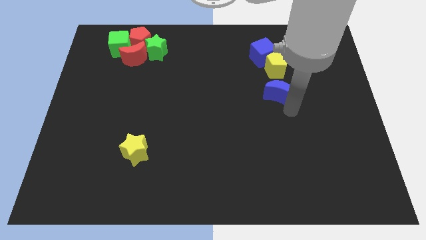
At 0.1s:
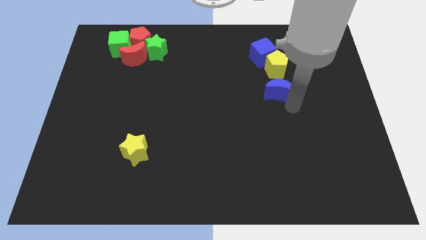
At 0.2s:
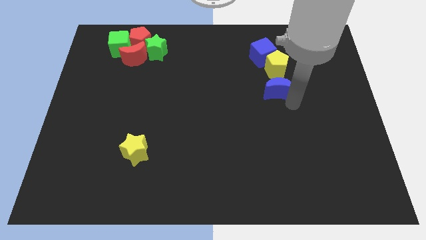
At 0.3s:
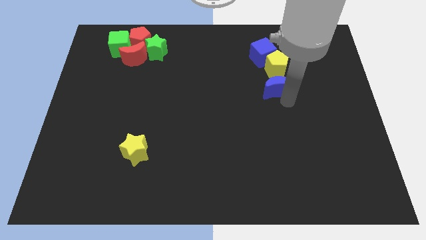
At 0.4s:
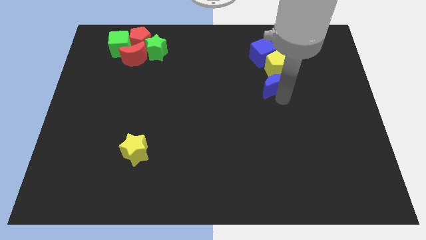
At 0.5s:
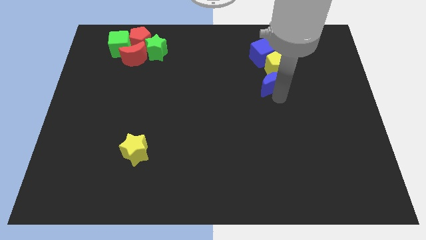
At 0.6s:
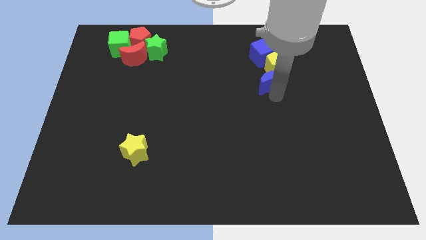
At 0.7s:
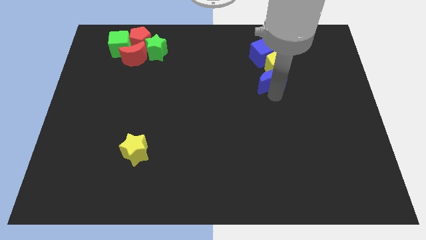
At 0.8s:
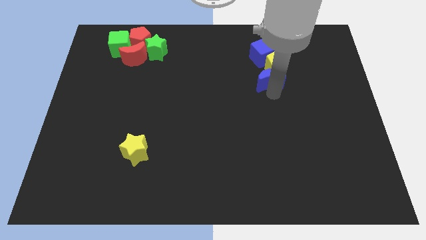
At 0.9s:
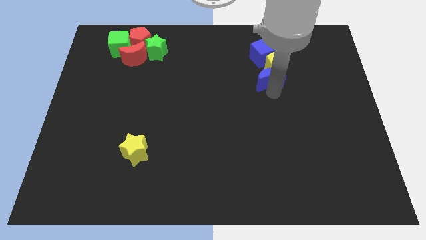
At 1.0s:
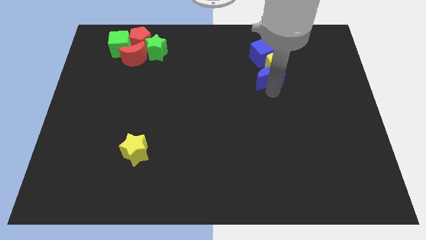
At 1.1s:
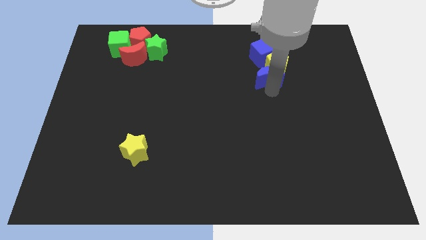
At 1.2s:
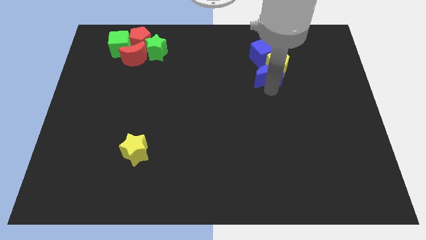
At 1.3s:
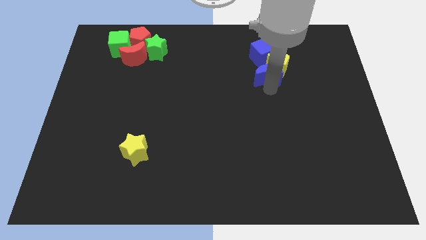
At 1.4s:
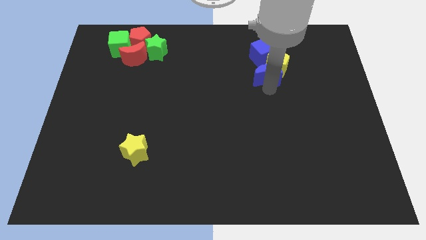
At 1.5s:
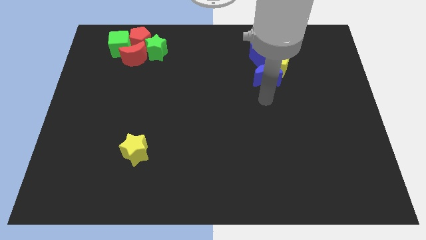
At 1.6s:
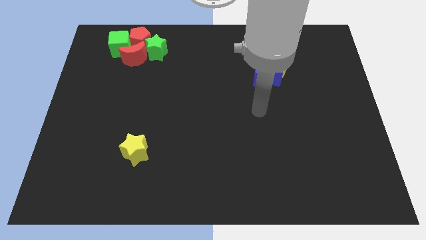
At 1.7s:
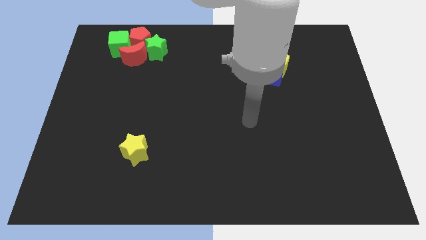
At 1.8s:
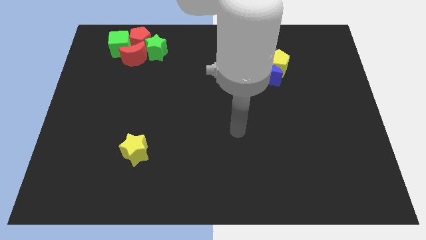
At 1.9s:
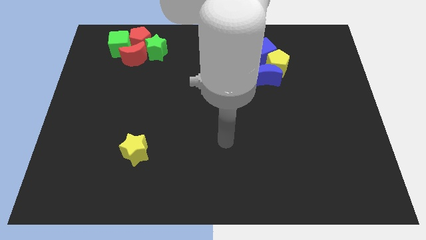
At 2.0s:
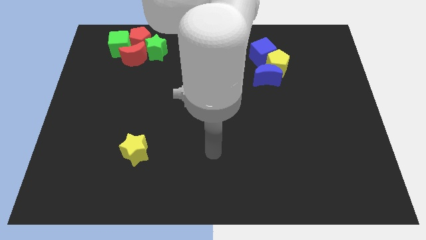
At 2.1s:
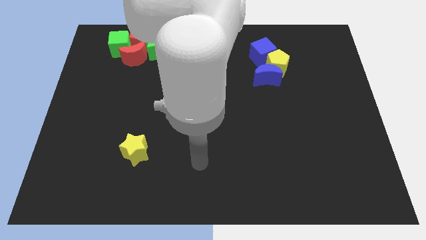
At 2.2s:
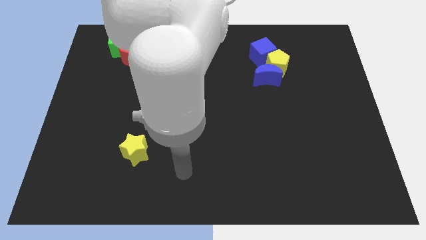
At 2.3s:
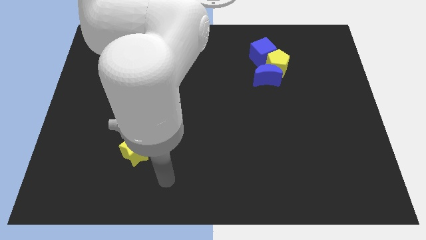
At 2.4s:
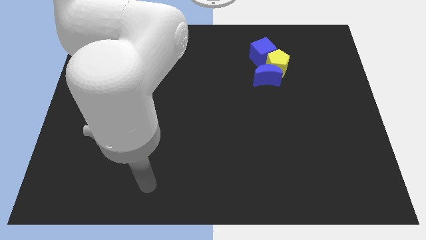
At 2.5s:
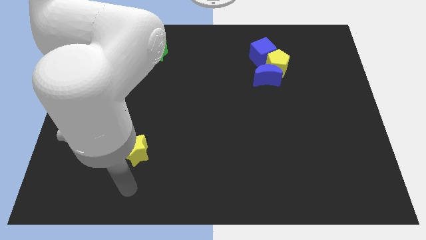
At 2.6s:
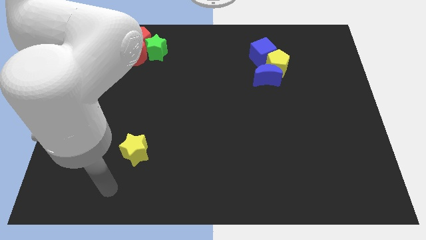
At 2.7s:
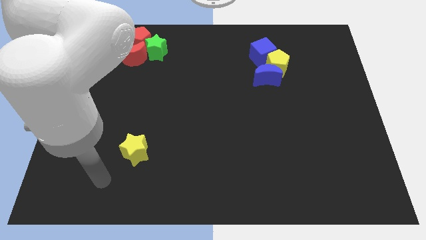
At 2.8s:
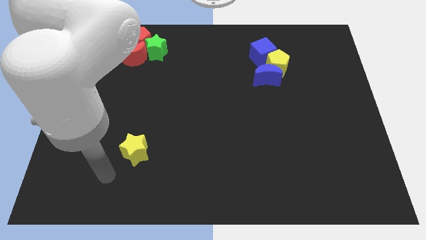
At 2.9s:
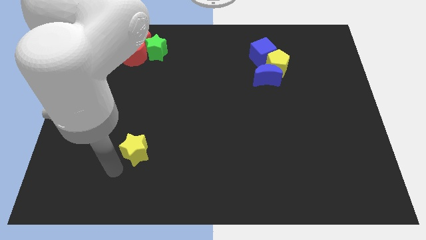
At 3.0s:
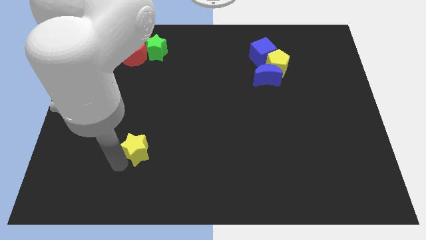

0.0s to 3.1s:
push the blue moon below the yellow pentagon

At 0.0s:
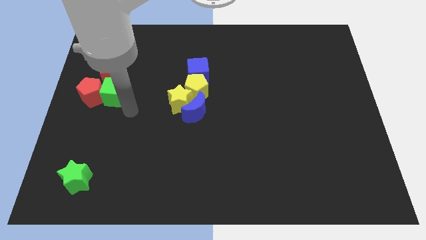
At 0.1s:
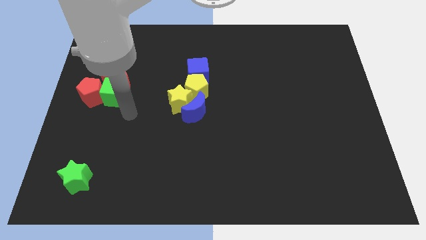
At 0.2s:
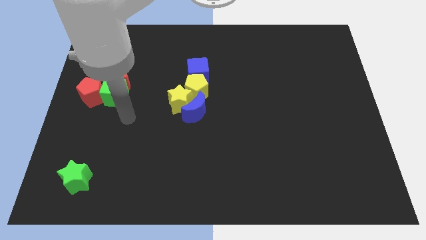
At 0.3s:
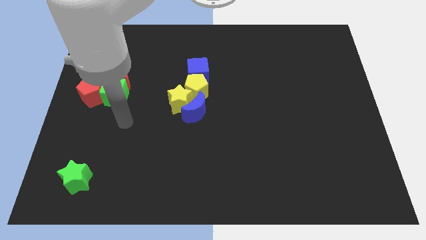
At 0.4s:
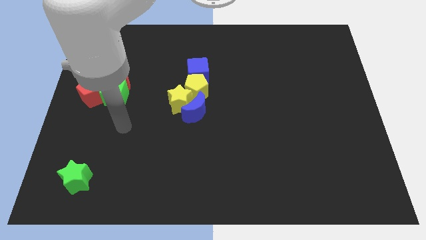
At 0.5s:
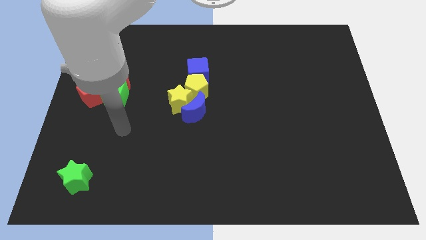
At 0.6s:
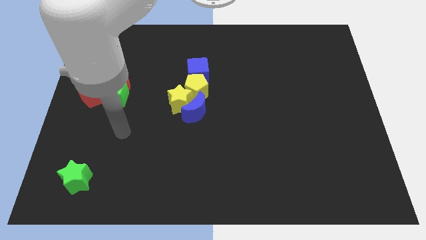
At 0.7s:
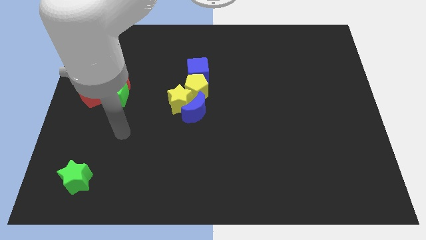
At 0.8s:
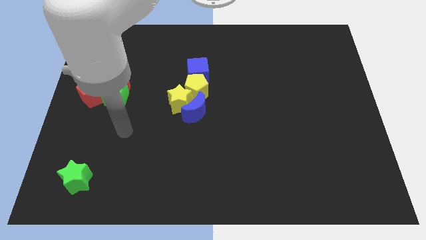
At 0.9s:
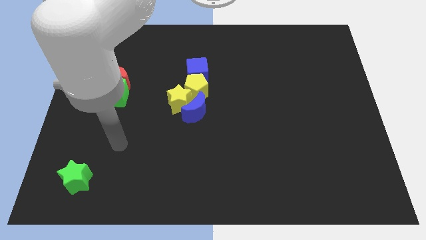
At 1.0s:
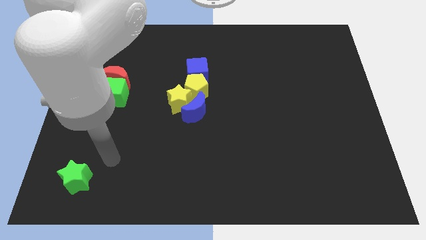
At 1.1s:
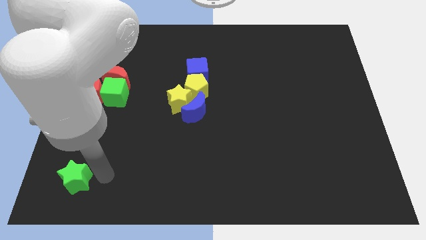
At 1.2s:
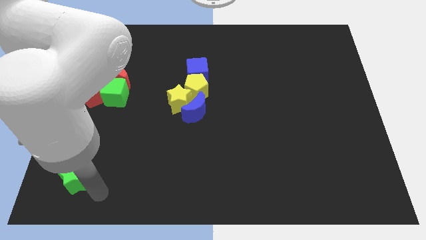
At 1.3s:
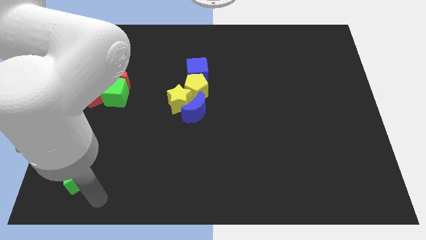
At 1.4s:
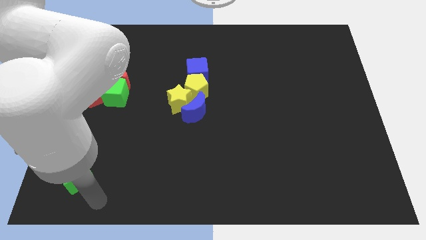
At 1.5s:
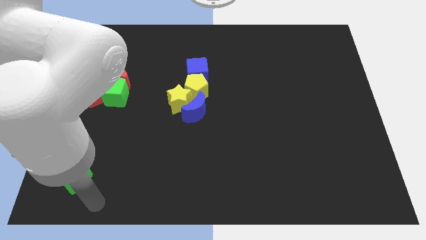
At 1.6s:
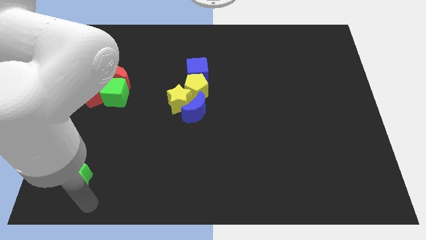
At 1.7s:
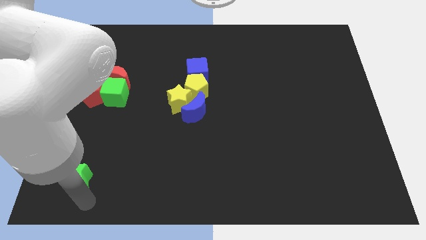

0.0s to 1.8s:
move the hand at the bottom of the green star

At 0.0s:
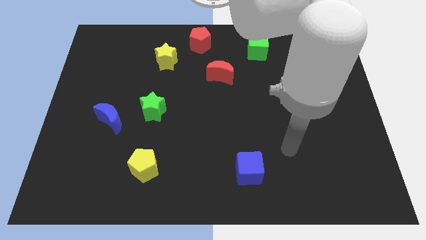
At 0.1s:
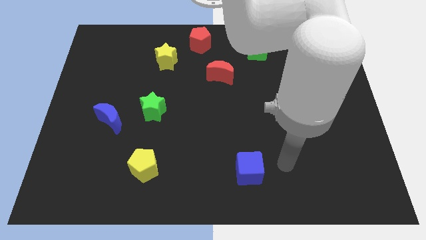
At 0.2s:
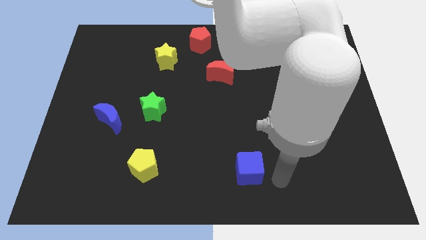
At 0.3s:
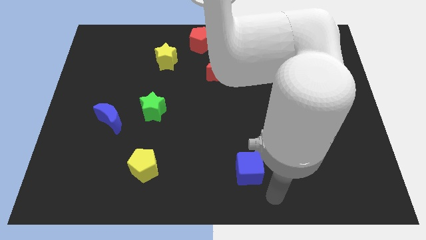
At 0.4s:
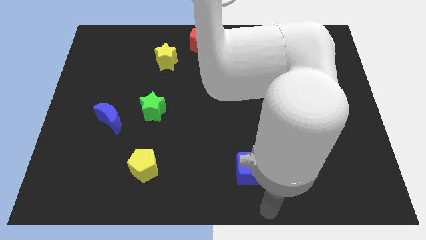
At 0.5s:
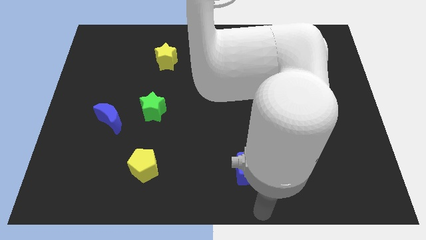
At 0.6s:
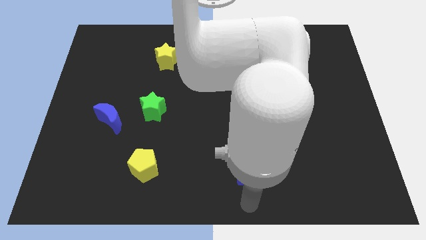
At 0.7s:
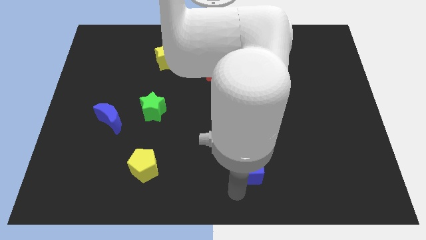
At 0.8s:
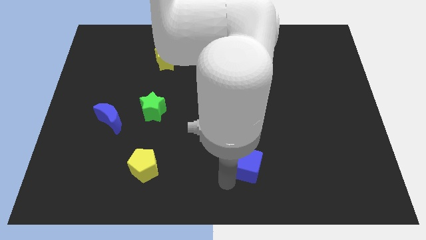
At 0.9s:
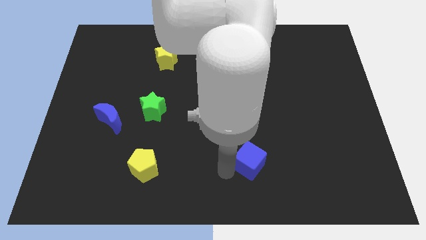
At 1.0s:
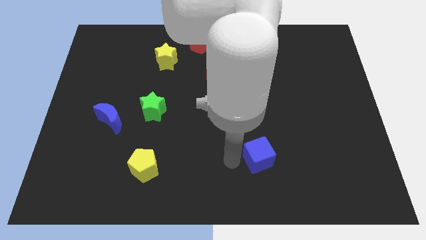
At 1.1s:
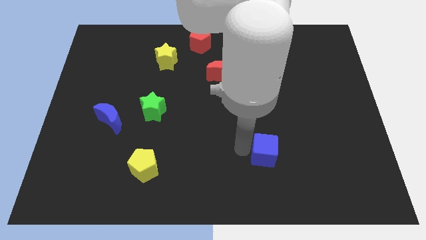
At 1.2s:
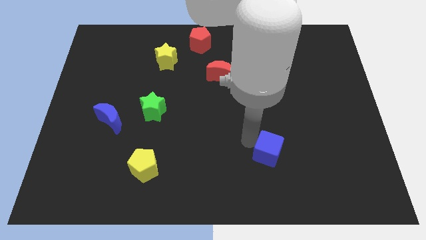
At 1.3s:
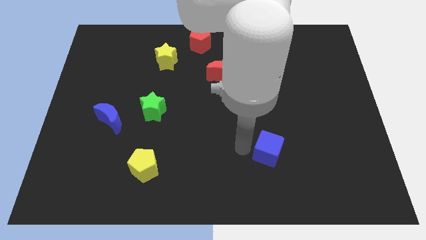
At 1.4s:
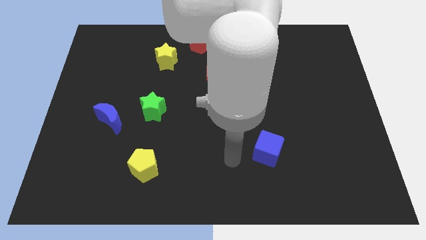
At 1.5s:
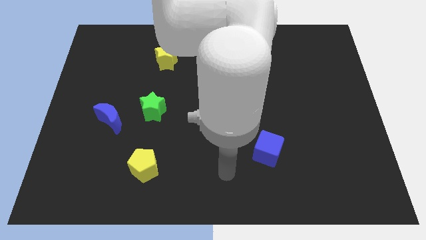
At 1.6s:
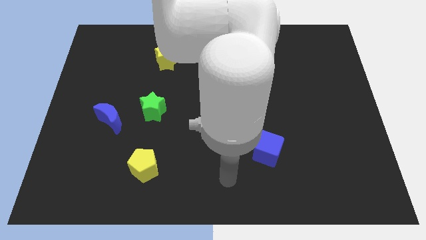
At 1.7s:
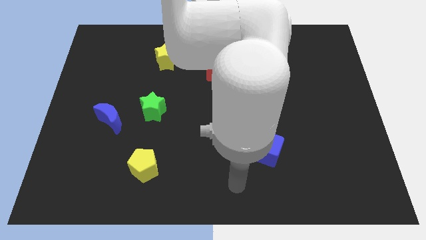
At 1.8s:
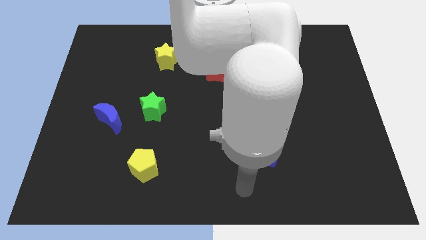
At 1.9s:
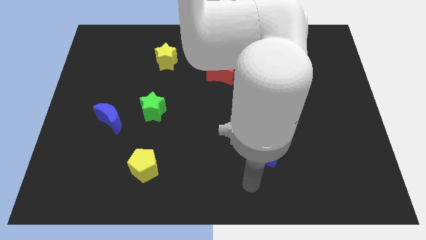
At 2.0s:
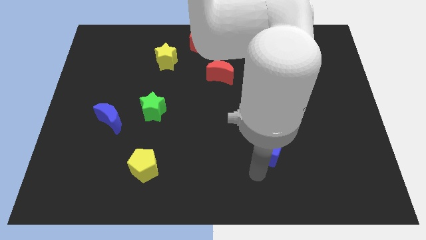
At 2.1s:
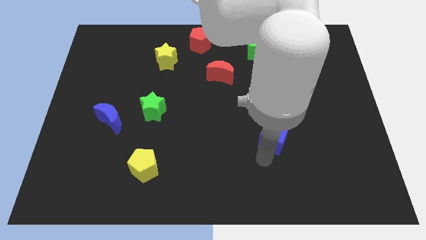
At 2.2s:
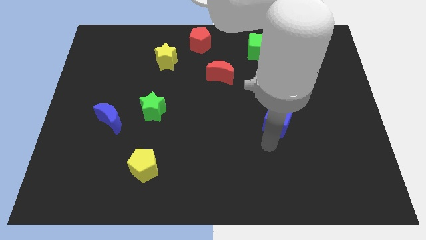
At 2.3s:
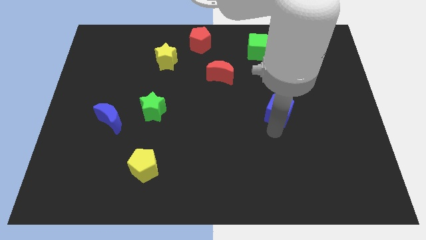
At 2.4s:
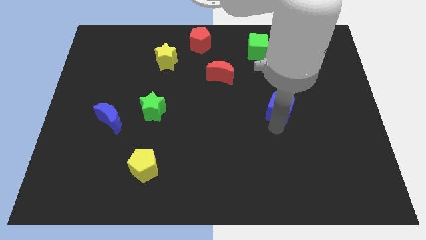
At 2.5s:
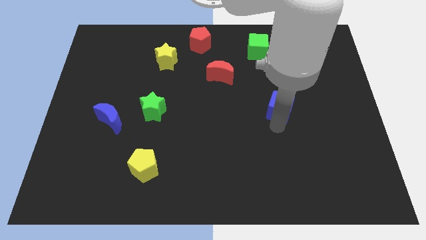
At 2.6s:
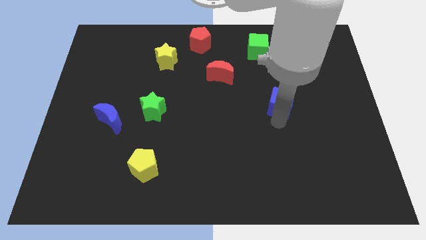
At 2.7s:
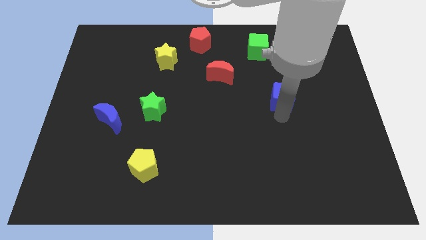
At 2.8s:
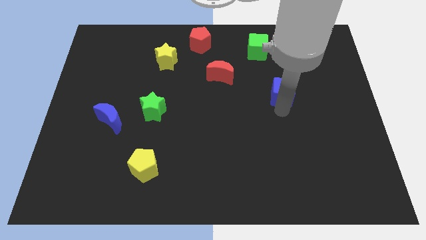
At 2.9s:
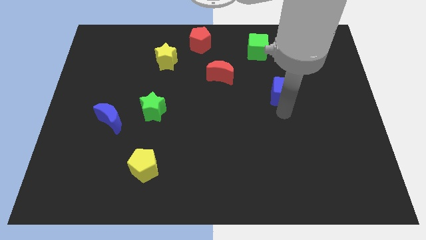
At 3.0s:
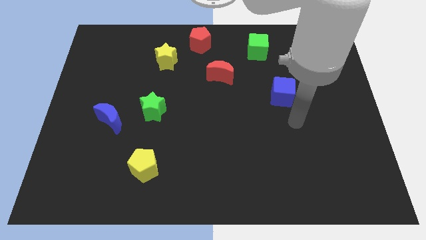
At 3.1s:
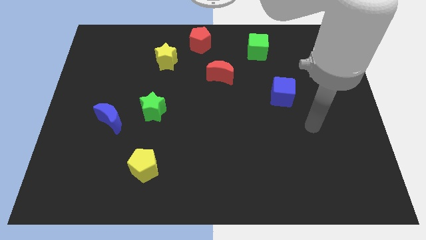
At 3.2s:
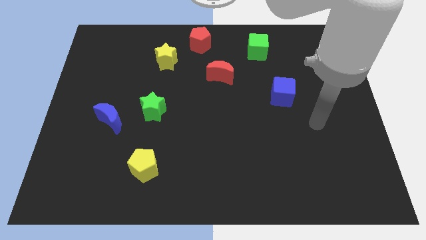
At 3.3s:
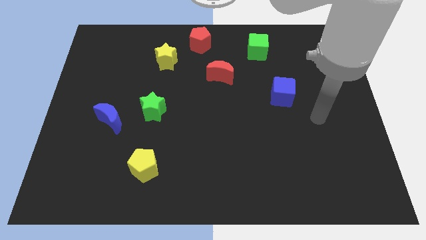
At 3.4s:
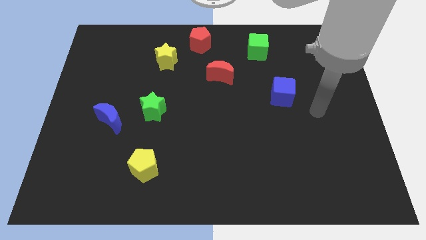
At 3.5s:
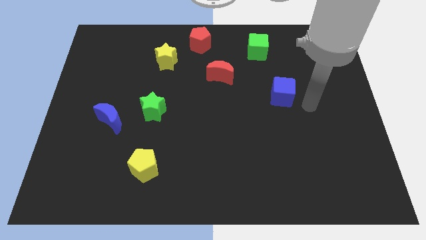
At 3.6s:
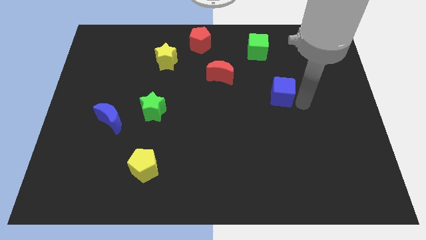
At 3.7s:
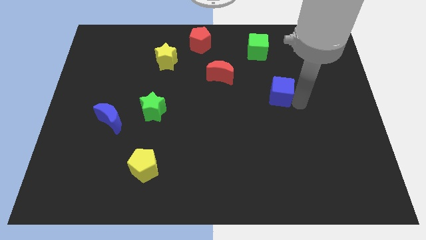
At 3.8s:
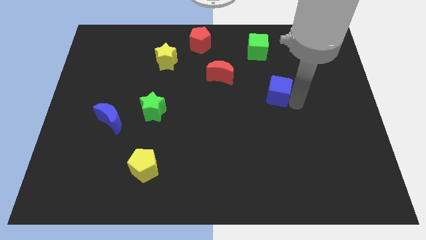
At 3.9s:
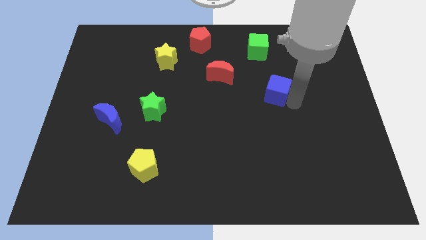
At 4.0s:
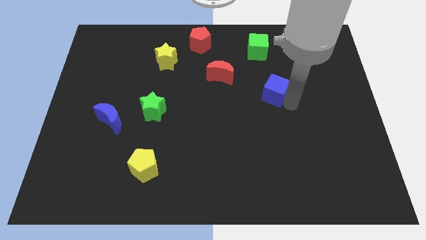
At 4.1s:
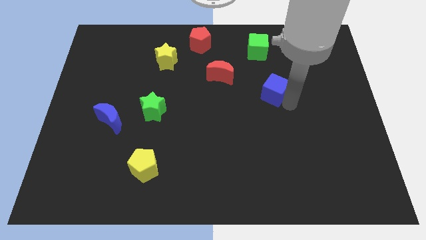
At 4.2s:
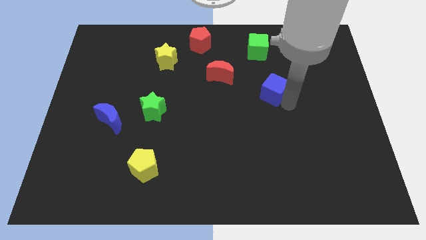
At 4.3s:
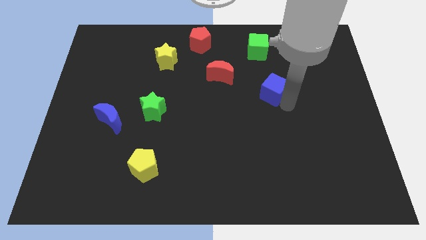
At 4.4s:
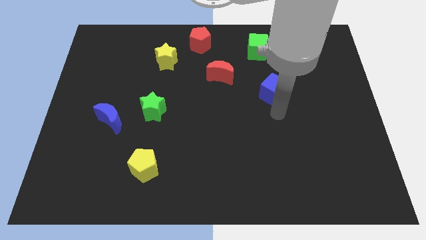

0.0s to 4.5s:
place the blue cube to the bottom of the green cube
